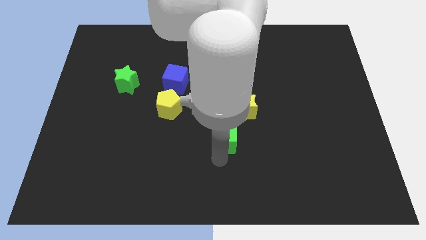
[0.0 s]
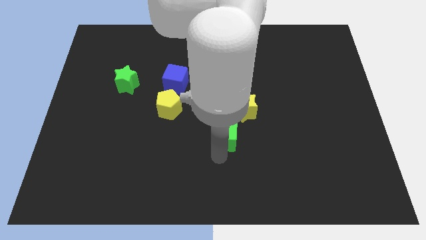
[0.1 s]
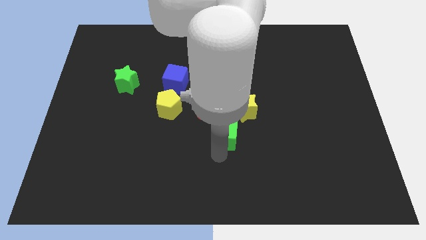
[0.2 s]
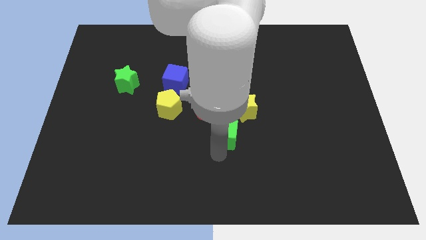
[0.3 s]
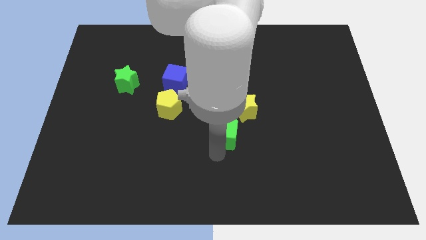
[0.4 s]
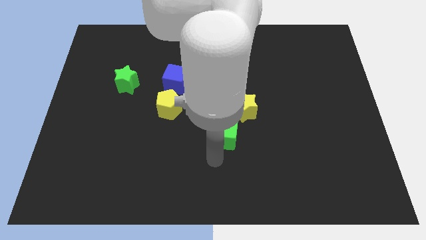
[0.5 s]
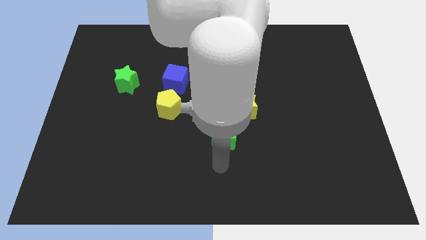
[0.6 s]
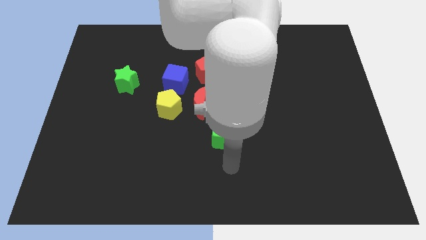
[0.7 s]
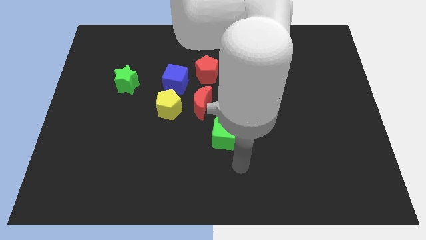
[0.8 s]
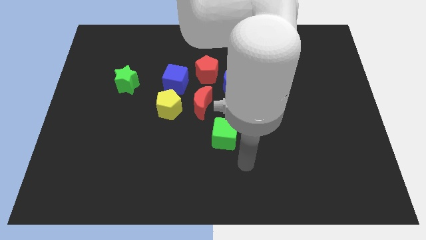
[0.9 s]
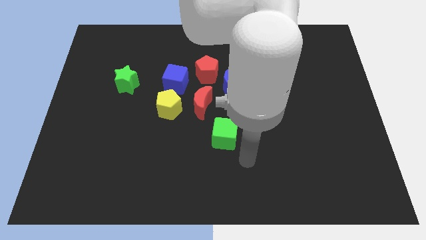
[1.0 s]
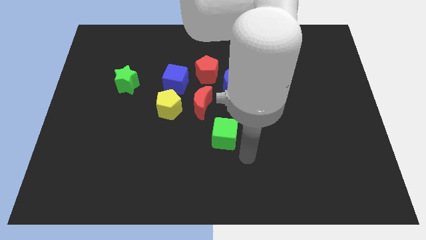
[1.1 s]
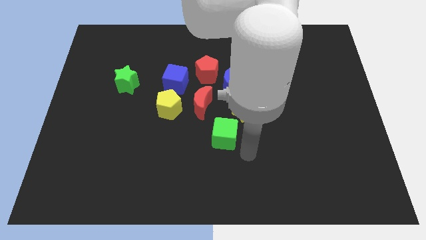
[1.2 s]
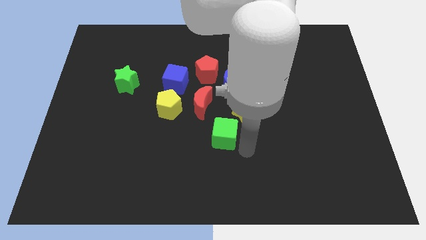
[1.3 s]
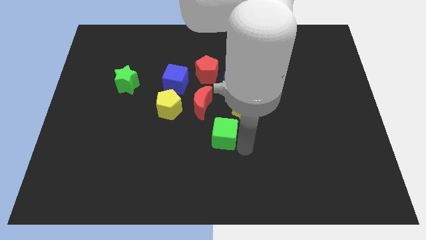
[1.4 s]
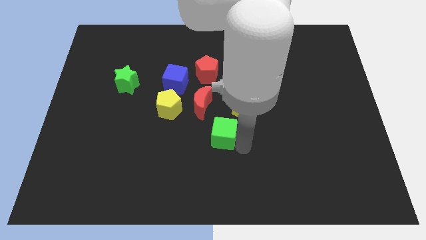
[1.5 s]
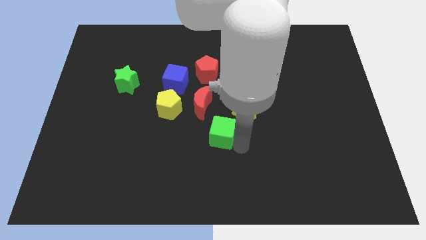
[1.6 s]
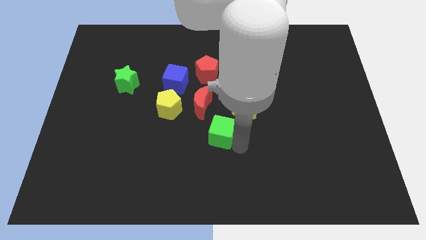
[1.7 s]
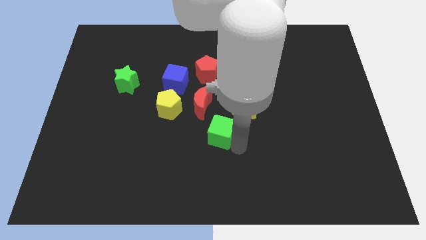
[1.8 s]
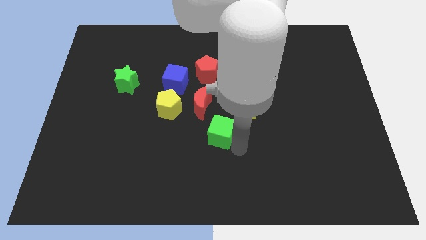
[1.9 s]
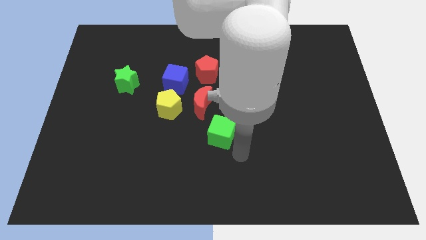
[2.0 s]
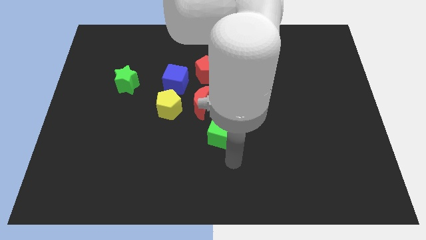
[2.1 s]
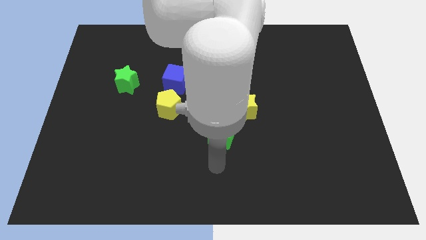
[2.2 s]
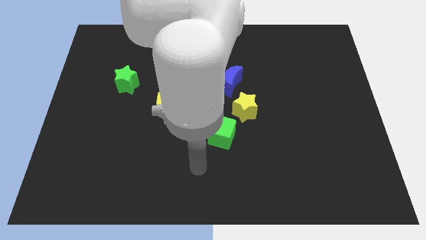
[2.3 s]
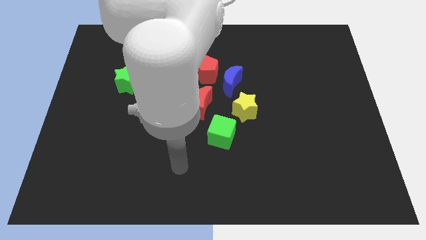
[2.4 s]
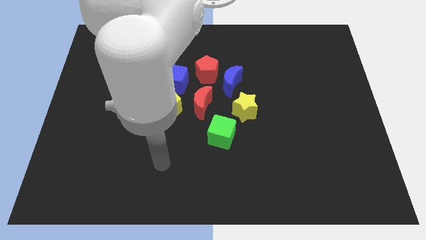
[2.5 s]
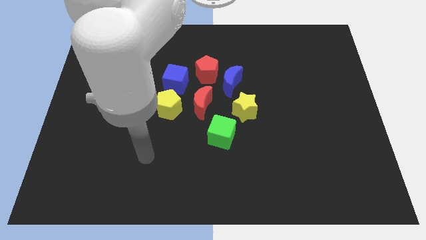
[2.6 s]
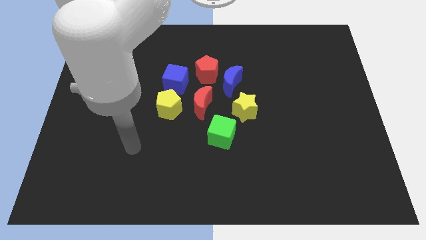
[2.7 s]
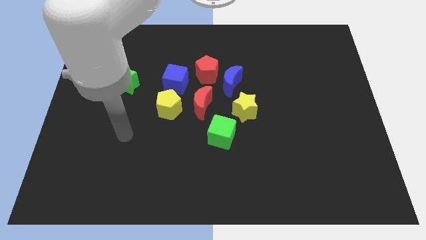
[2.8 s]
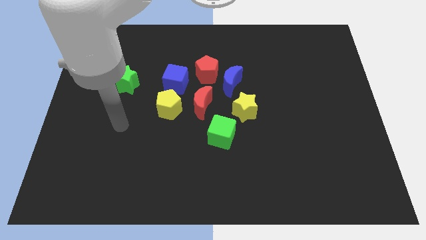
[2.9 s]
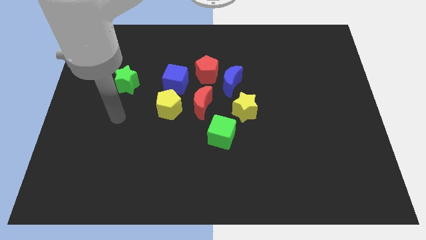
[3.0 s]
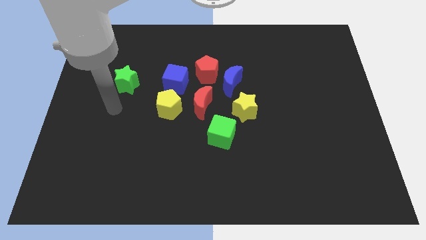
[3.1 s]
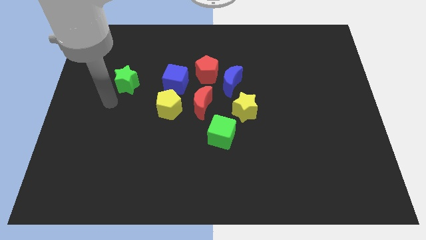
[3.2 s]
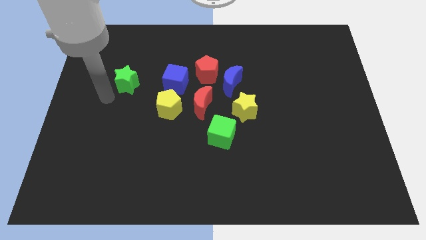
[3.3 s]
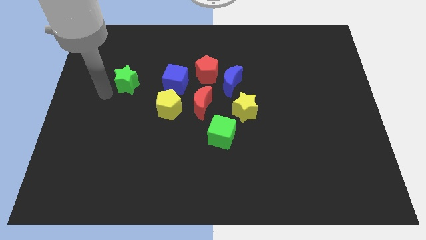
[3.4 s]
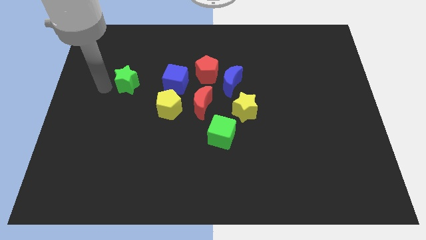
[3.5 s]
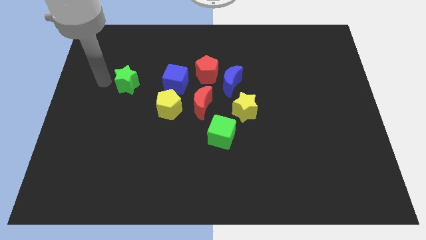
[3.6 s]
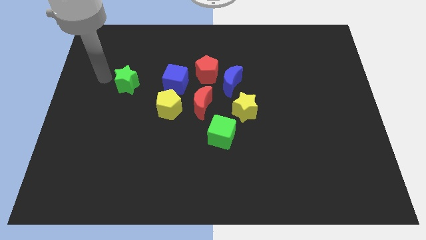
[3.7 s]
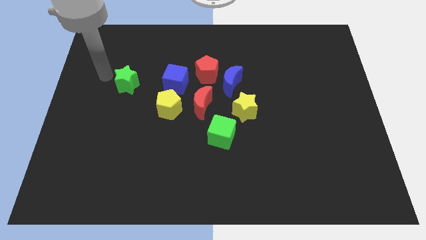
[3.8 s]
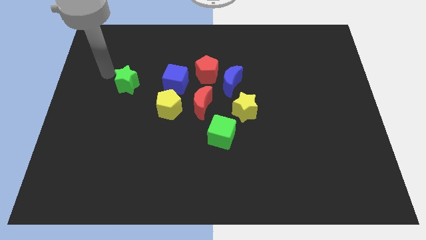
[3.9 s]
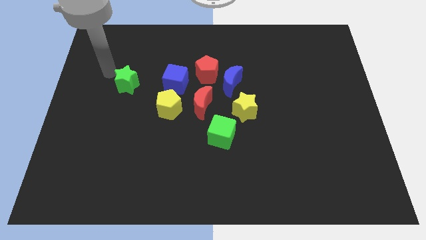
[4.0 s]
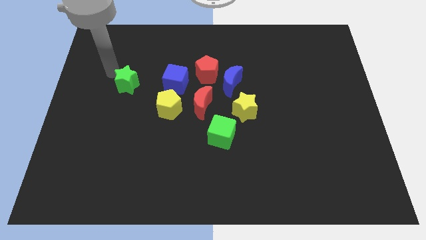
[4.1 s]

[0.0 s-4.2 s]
place the green cube towards the bottom right side of the red crescent

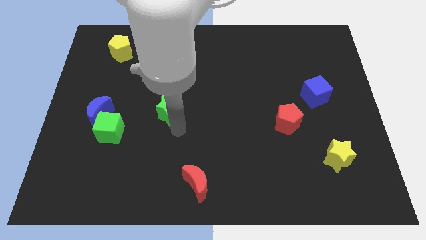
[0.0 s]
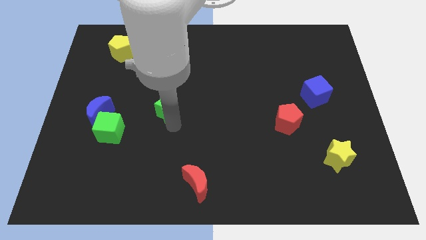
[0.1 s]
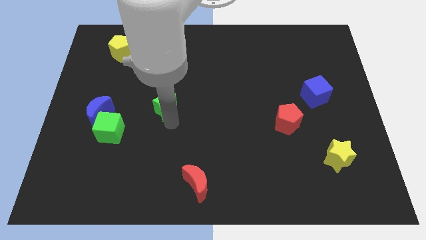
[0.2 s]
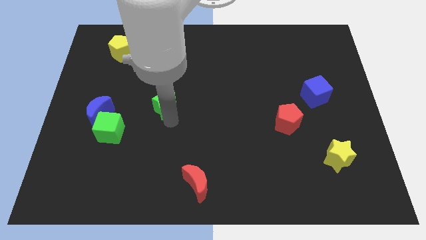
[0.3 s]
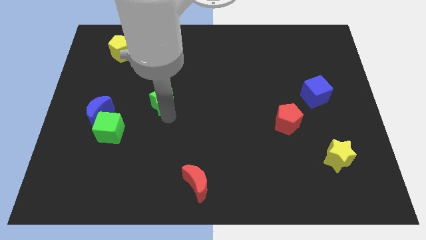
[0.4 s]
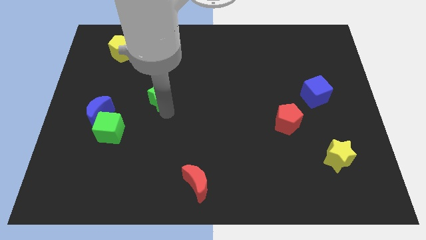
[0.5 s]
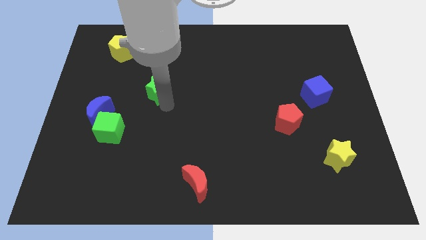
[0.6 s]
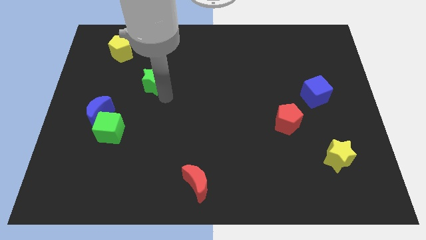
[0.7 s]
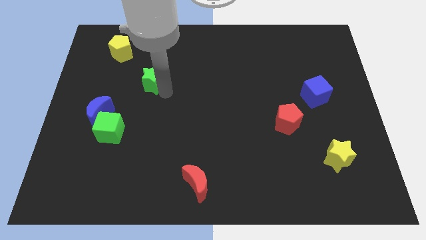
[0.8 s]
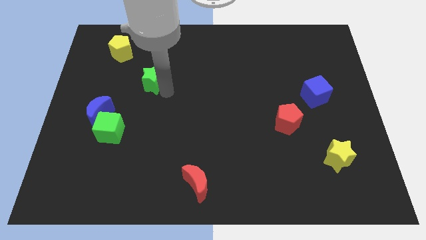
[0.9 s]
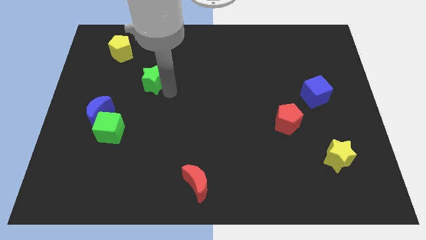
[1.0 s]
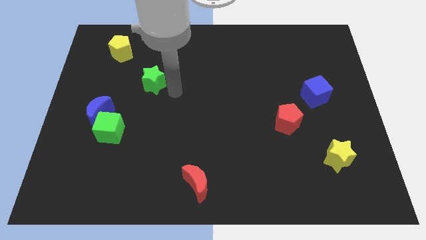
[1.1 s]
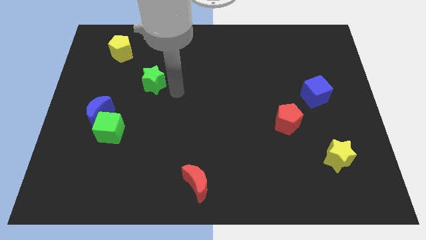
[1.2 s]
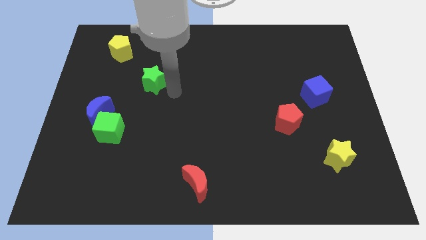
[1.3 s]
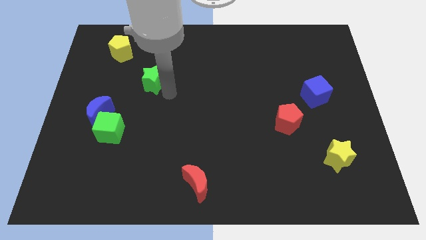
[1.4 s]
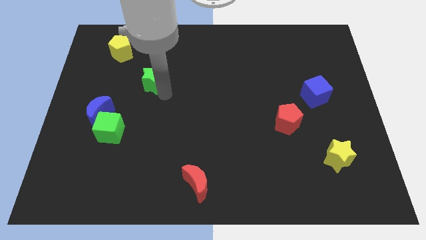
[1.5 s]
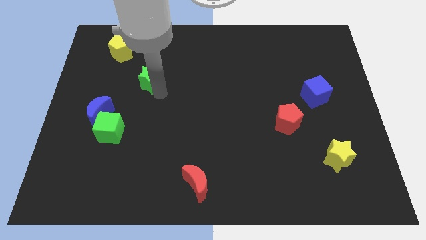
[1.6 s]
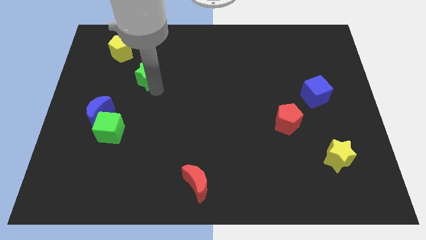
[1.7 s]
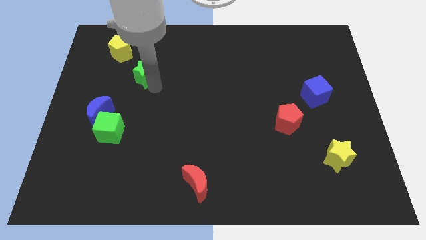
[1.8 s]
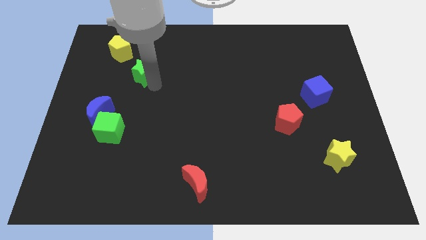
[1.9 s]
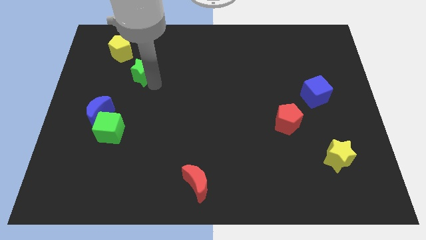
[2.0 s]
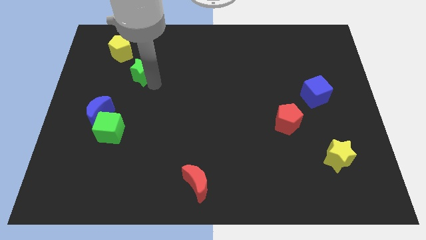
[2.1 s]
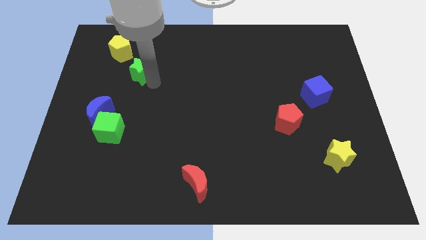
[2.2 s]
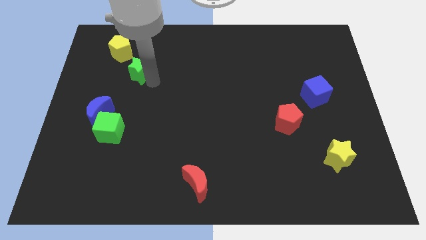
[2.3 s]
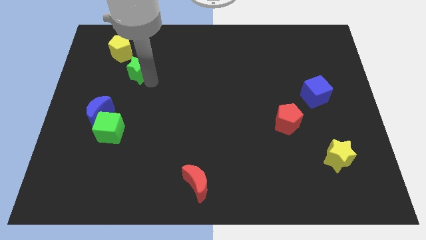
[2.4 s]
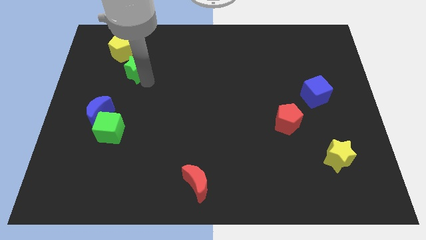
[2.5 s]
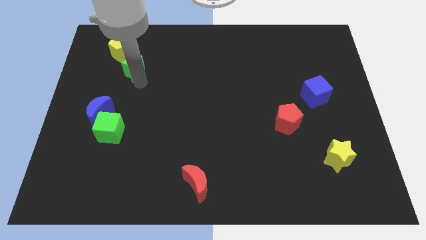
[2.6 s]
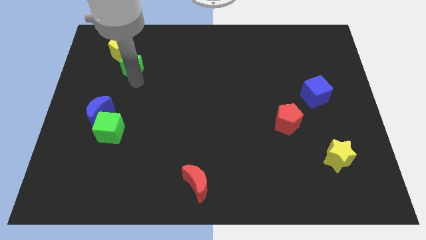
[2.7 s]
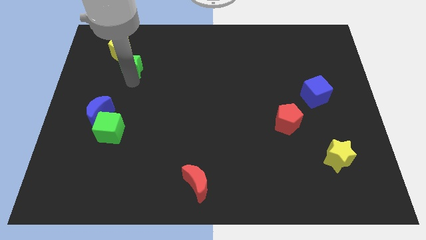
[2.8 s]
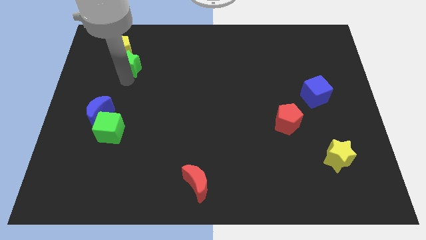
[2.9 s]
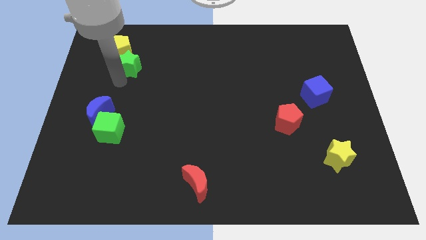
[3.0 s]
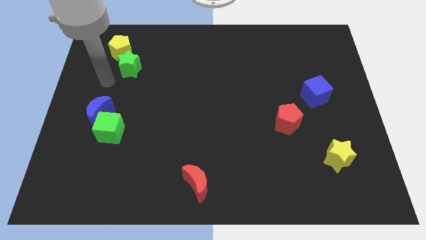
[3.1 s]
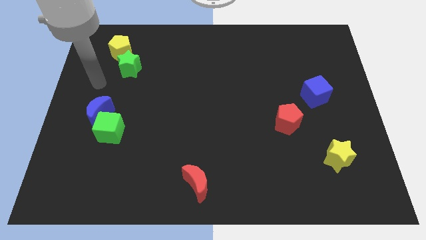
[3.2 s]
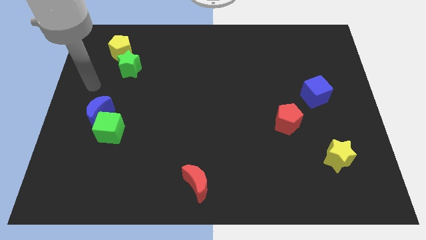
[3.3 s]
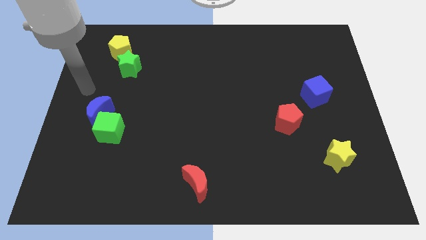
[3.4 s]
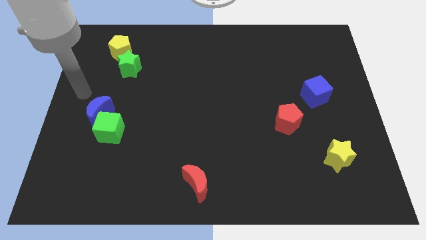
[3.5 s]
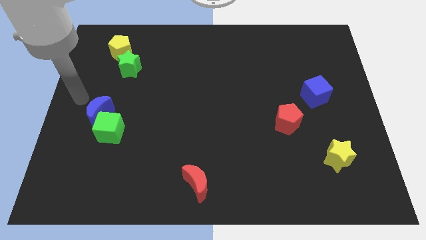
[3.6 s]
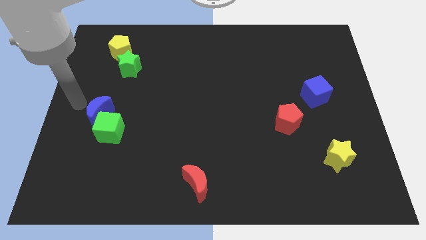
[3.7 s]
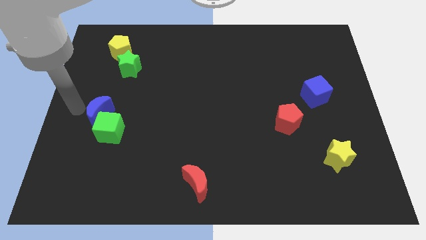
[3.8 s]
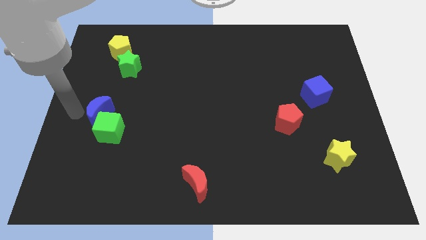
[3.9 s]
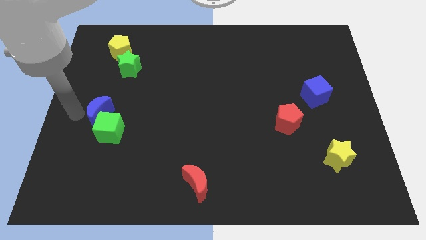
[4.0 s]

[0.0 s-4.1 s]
move the green star close to the yellow pentagon

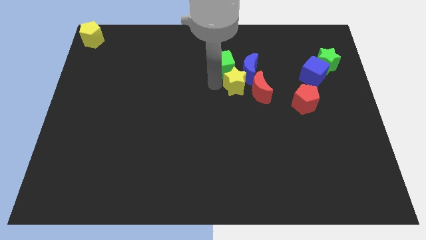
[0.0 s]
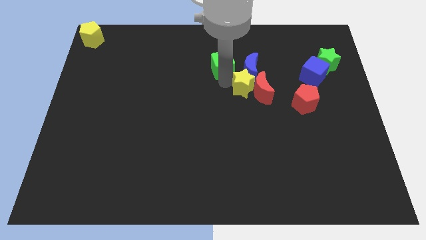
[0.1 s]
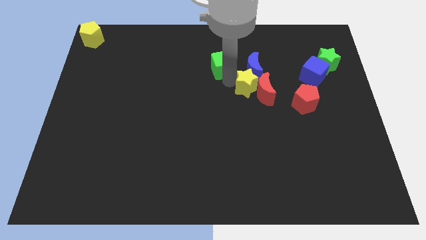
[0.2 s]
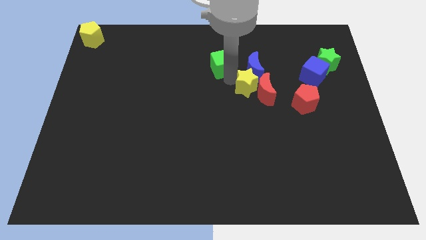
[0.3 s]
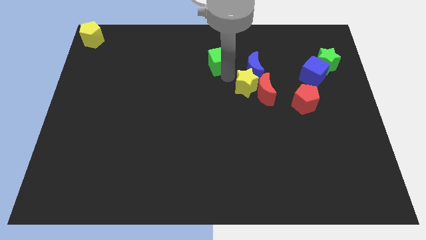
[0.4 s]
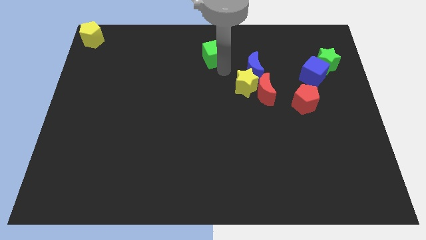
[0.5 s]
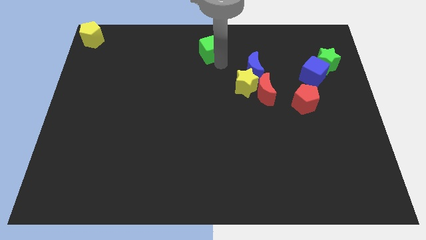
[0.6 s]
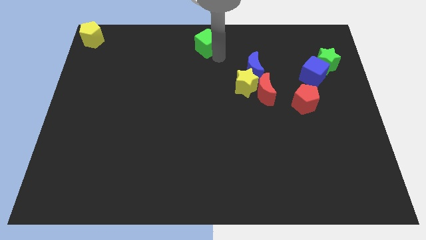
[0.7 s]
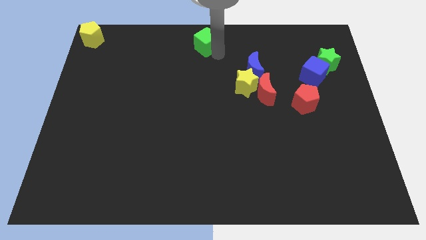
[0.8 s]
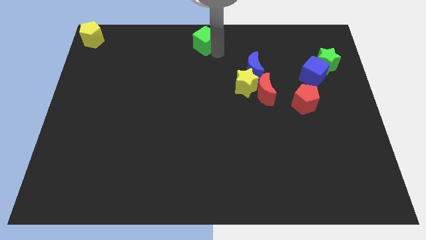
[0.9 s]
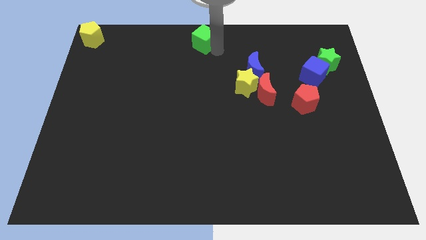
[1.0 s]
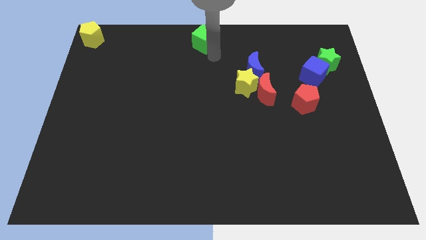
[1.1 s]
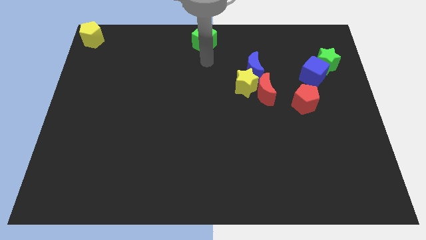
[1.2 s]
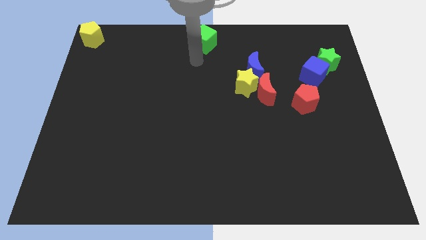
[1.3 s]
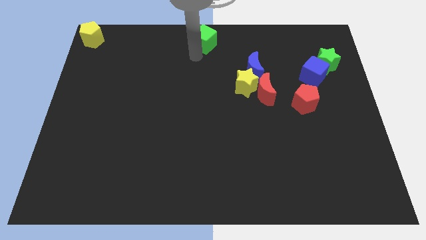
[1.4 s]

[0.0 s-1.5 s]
separate green cube from the group of blocks
